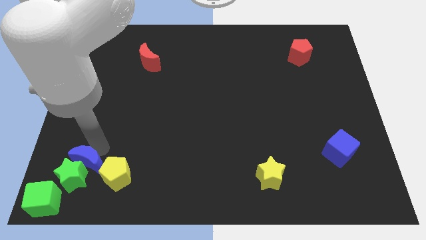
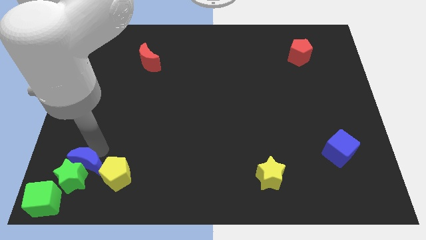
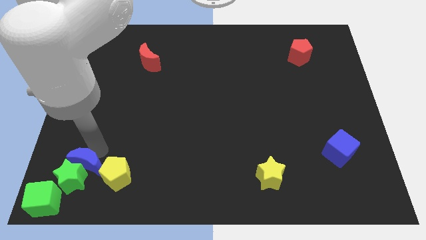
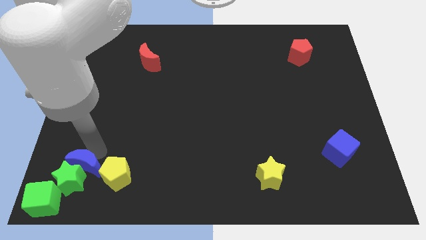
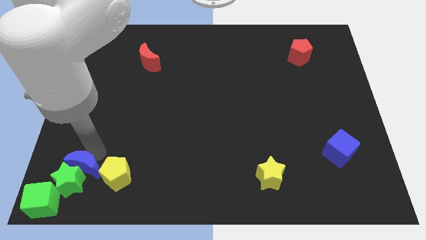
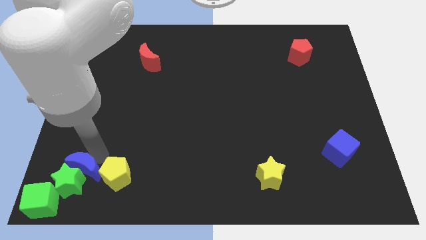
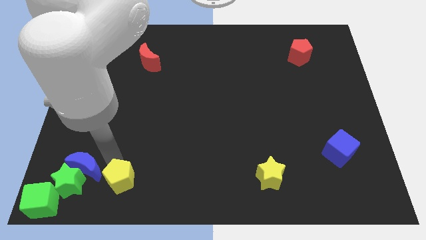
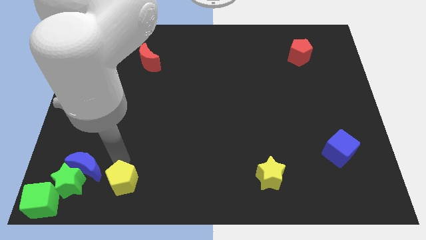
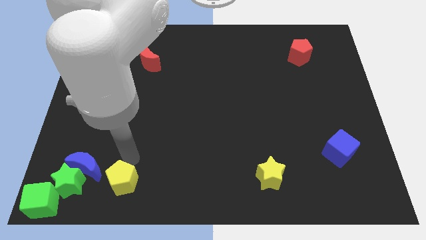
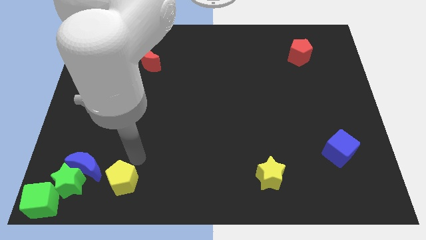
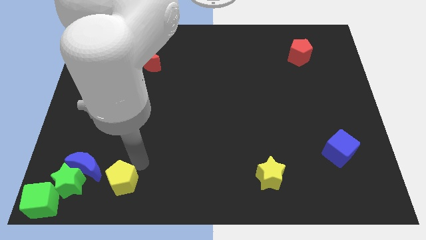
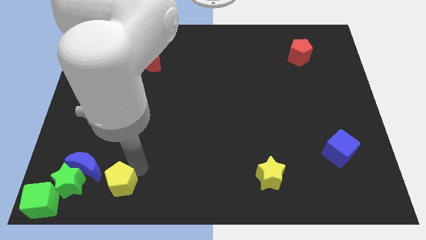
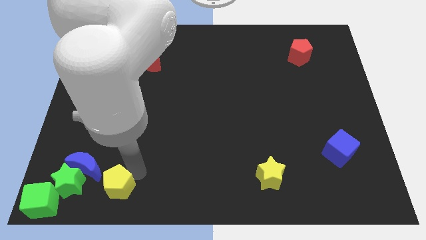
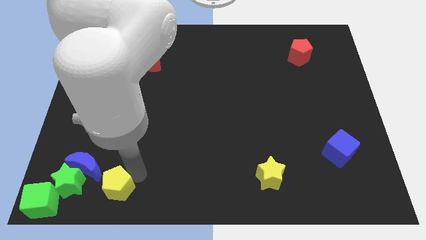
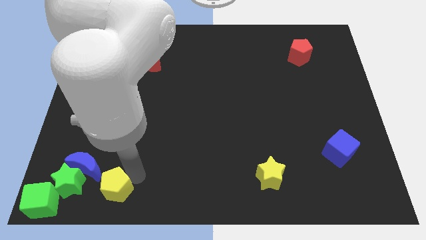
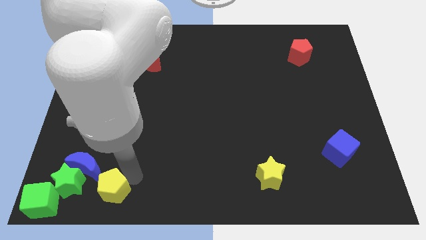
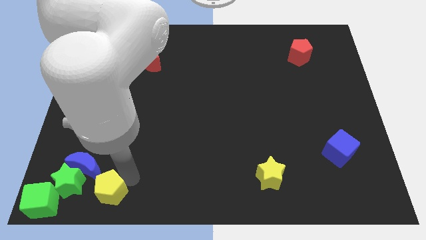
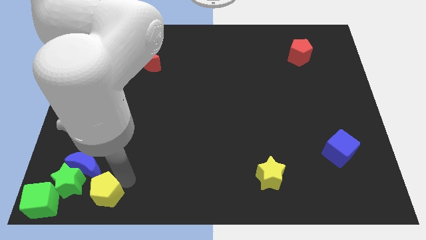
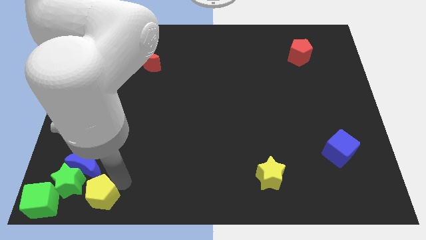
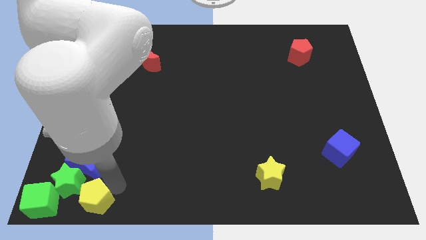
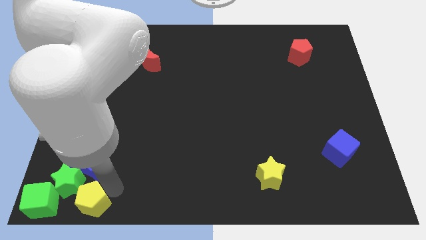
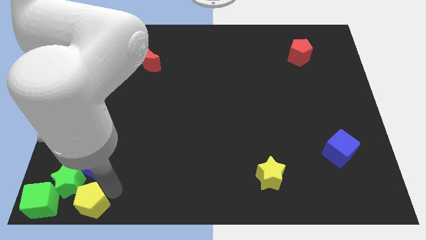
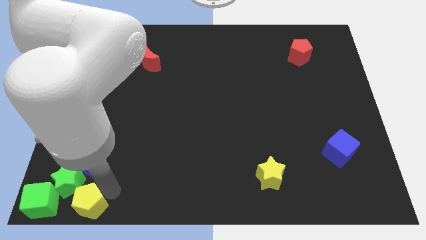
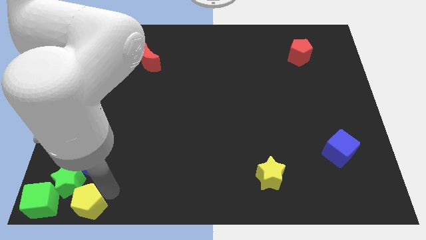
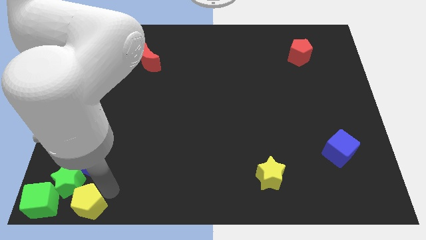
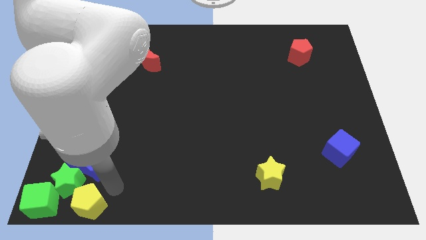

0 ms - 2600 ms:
move yellow pentagon to the bottom left

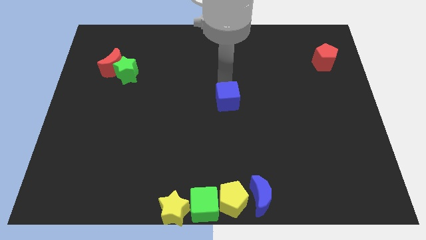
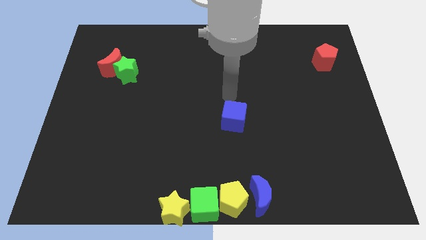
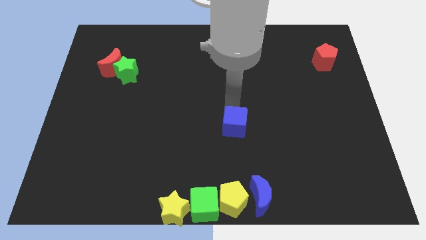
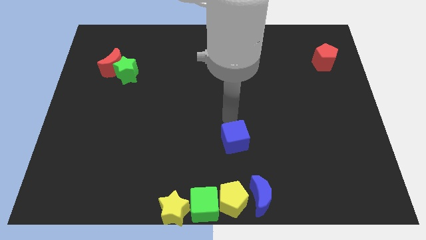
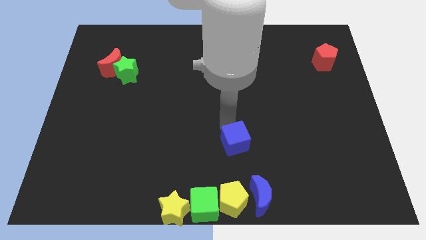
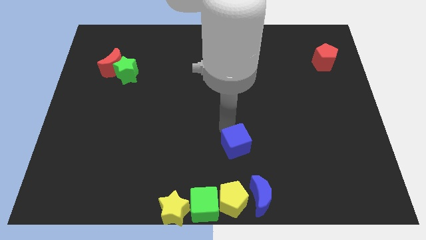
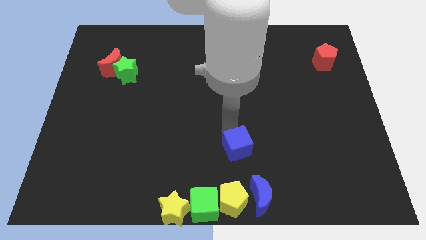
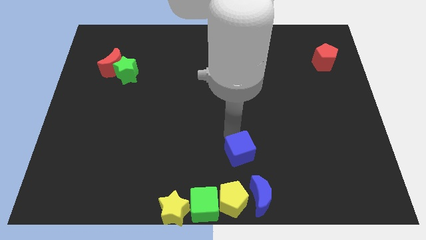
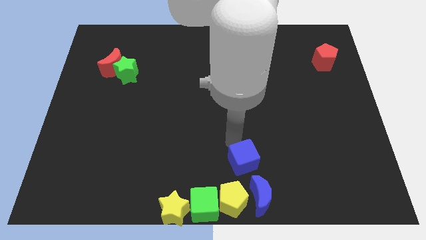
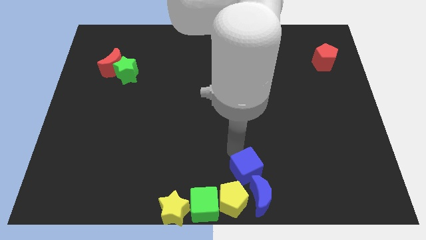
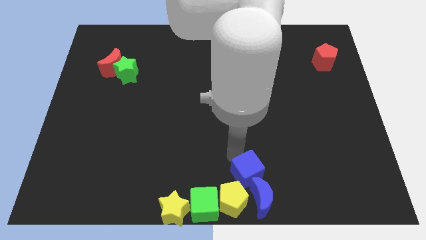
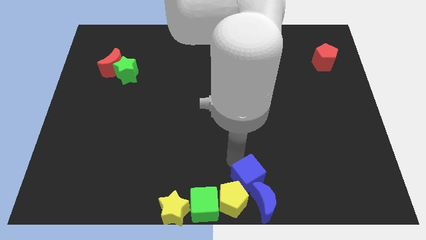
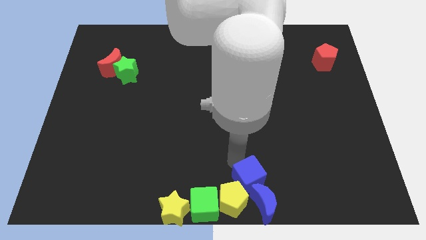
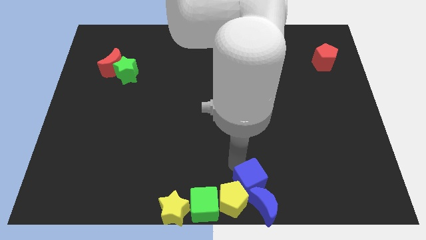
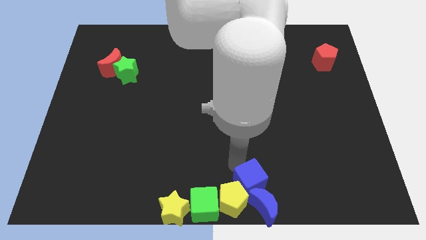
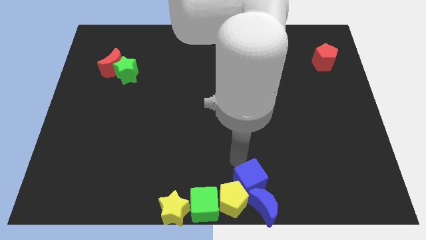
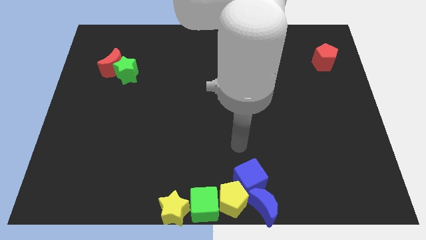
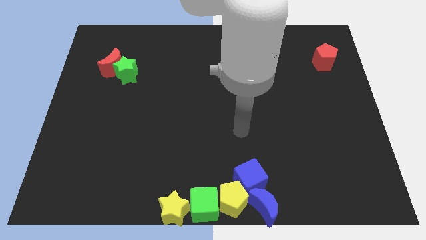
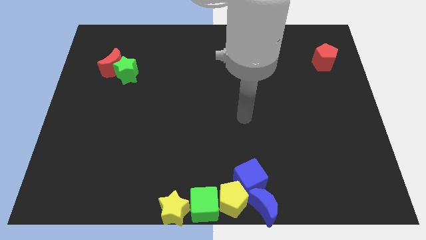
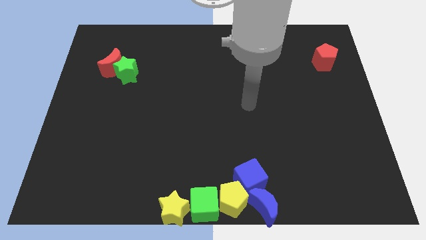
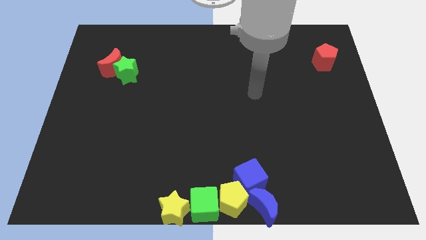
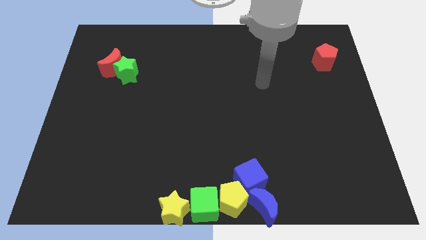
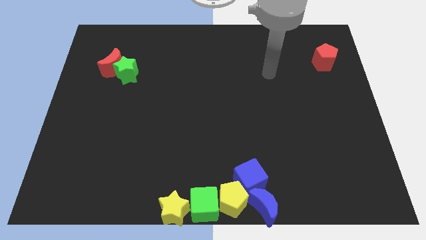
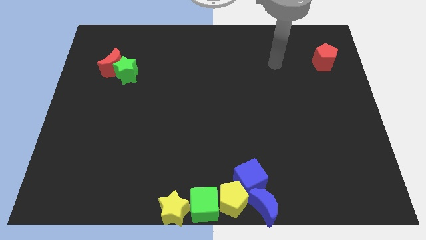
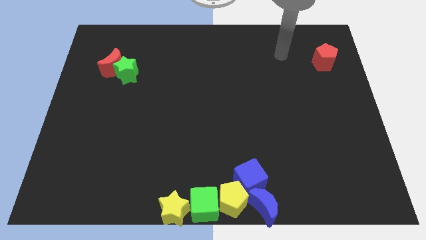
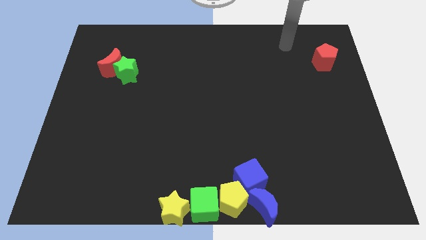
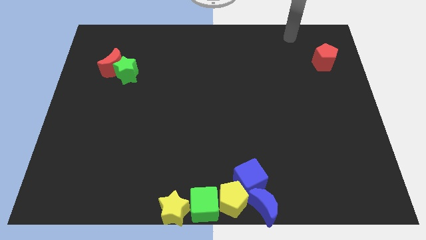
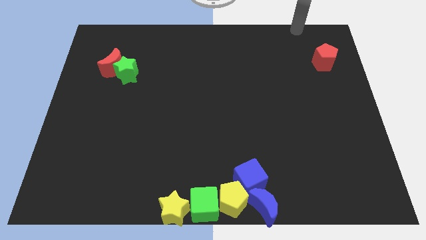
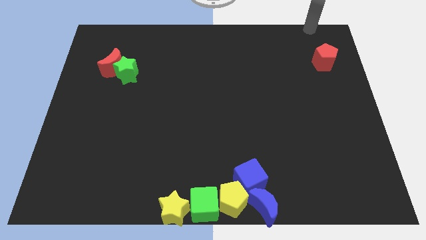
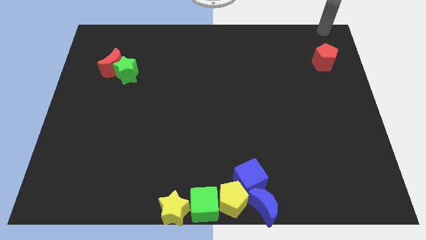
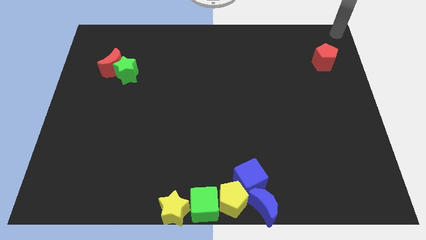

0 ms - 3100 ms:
push blue cube to the bottom of the blocks

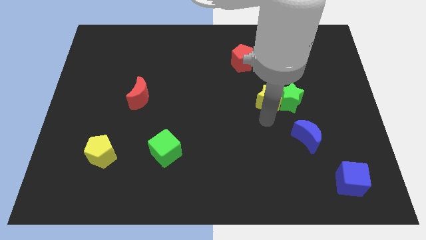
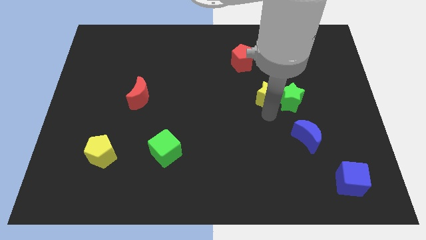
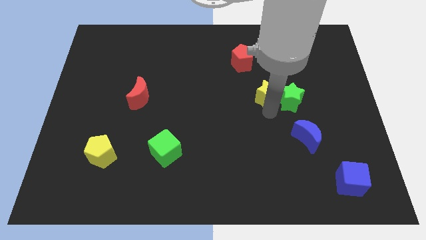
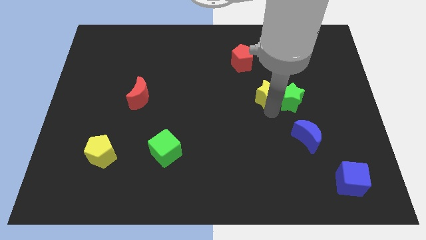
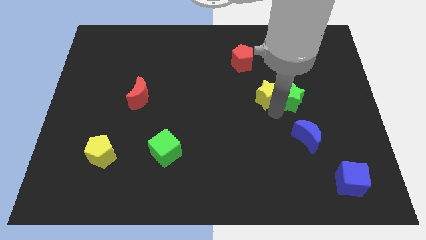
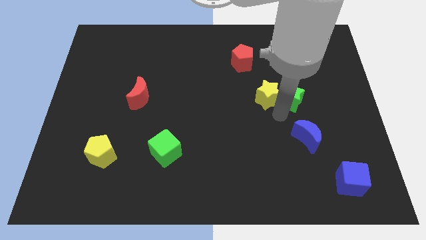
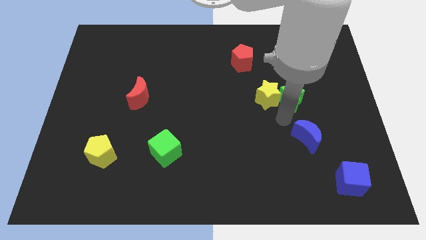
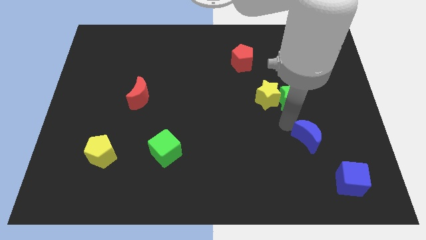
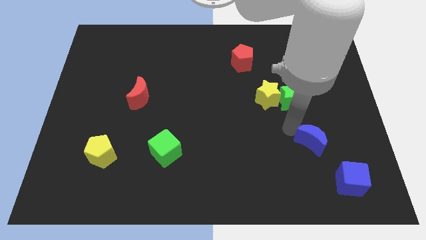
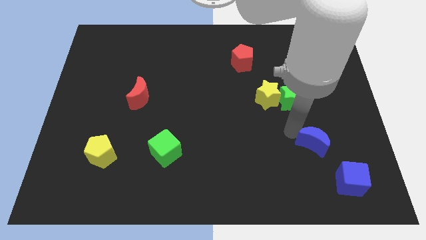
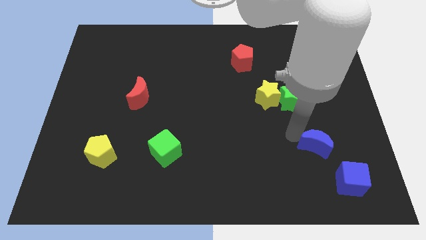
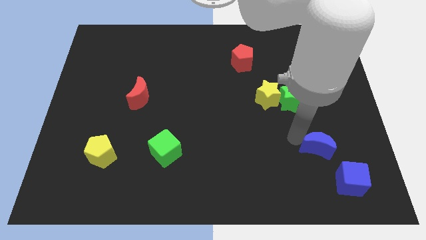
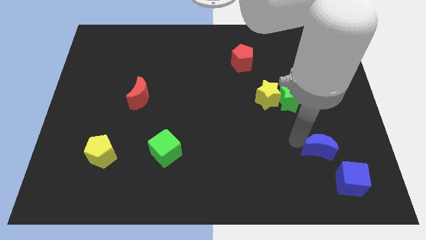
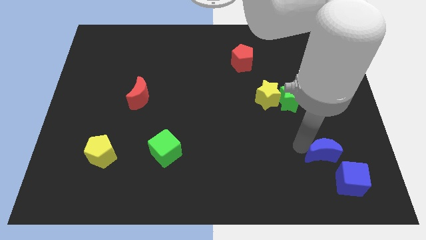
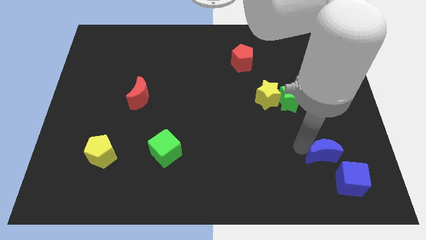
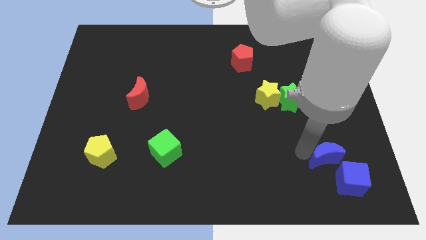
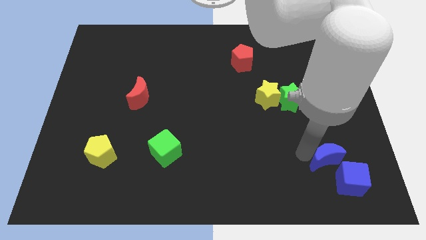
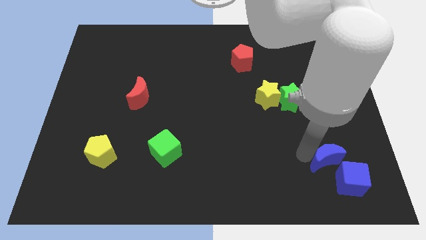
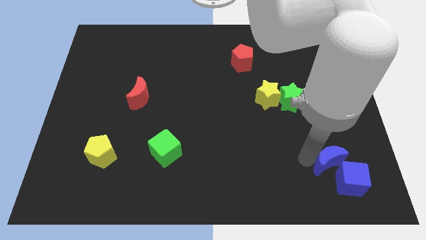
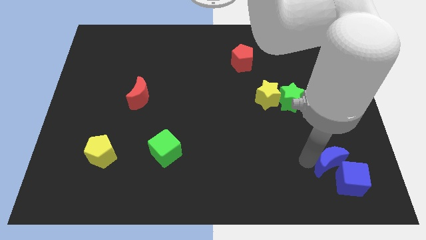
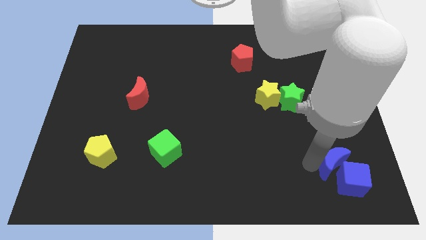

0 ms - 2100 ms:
slide the blue crescent into the blue cube

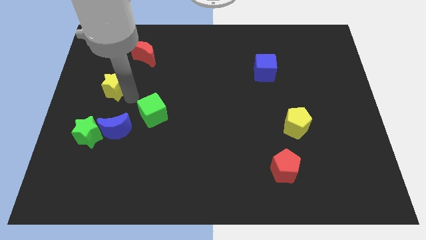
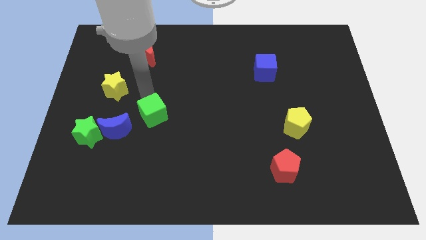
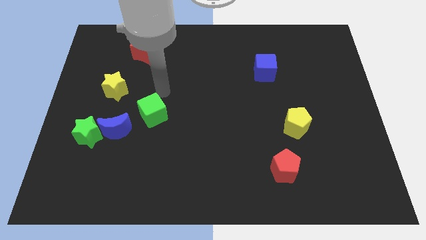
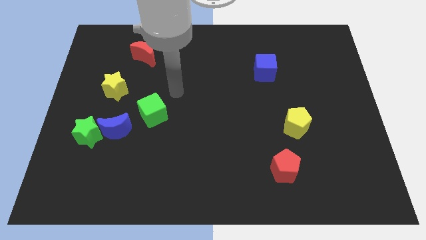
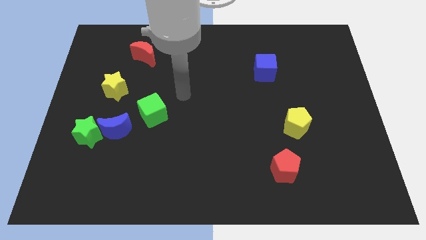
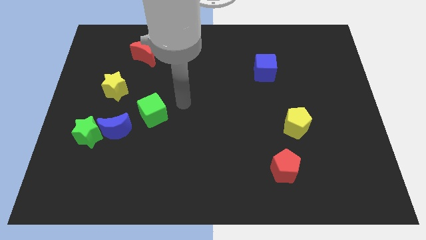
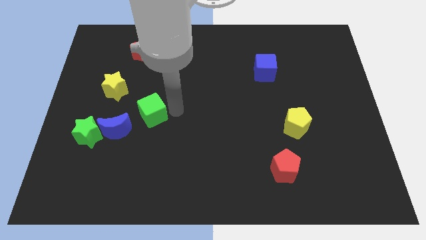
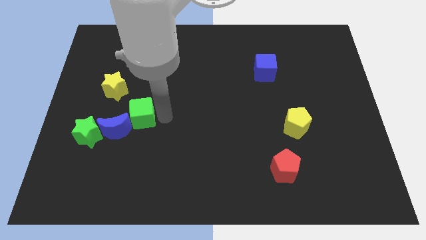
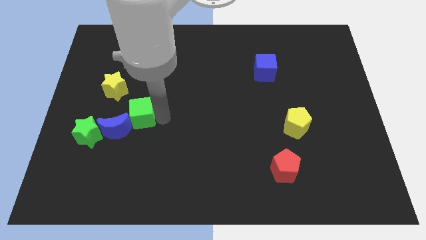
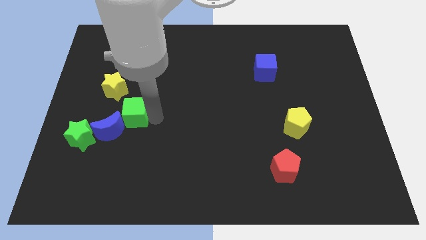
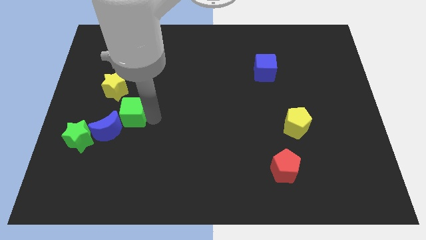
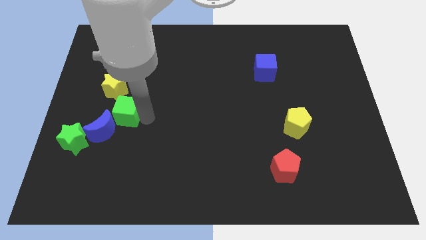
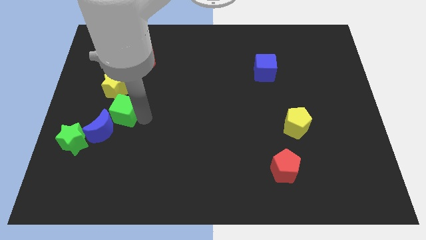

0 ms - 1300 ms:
place the green cube to the top right side of the blue moon
